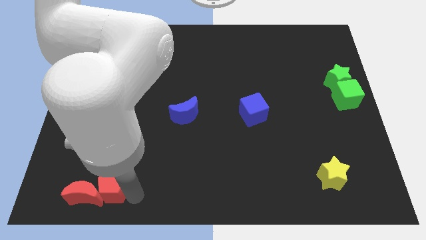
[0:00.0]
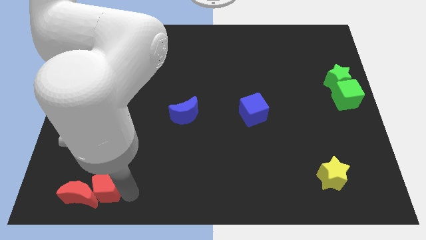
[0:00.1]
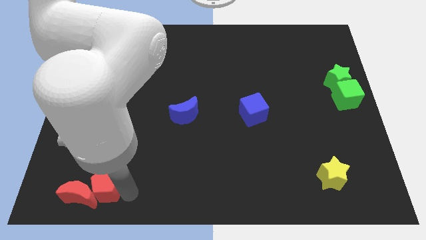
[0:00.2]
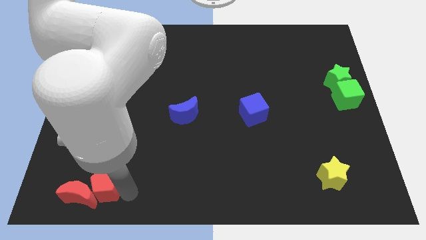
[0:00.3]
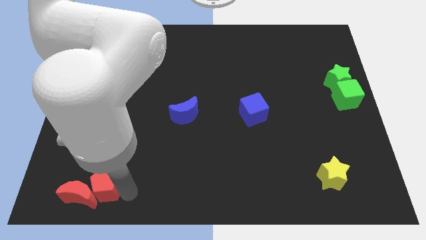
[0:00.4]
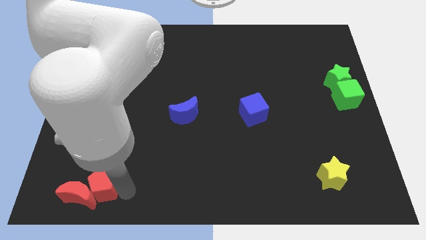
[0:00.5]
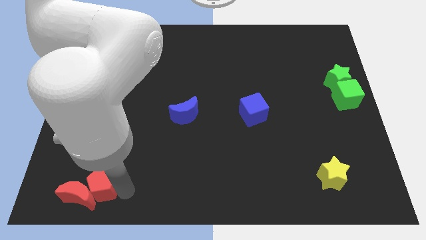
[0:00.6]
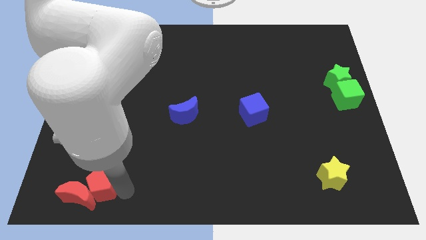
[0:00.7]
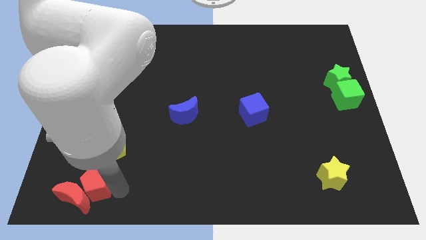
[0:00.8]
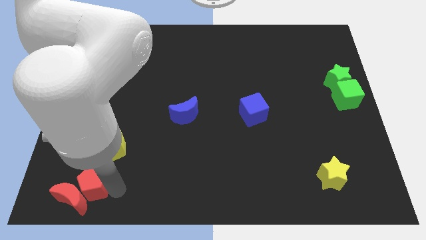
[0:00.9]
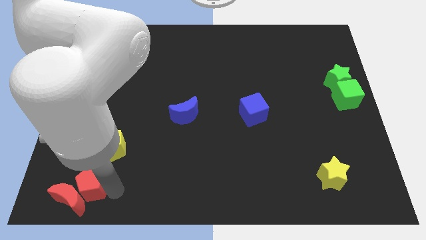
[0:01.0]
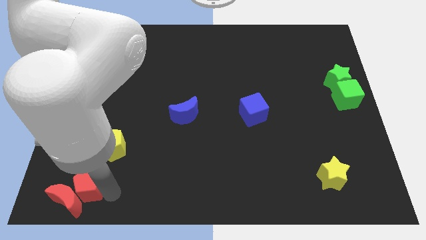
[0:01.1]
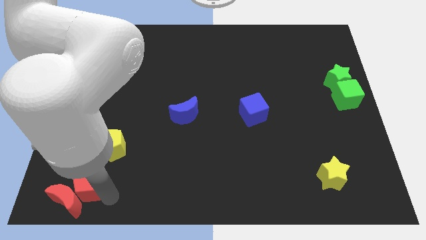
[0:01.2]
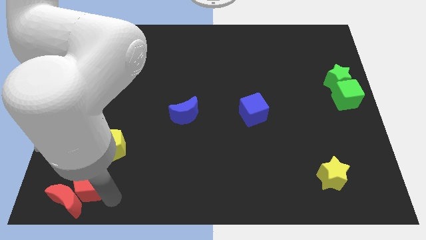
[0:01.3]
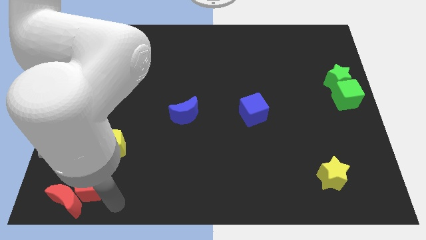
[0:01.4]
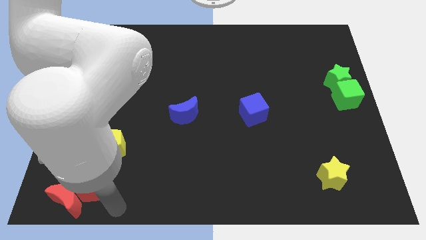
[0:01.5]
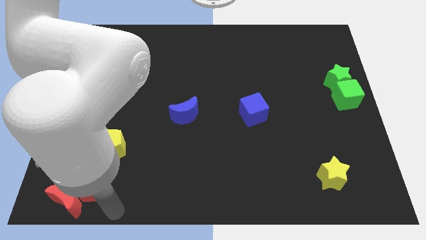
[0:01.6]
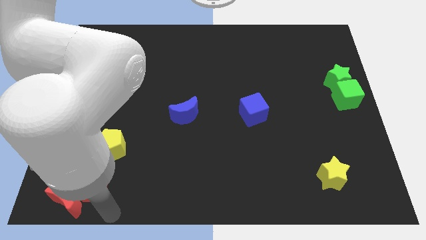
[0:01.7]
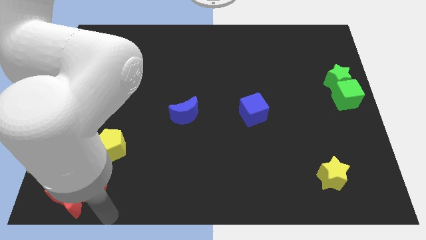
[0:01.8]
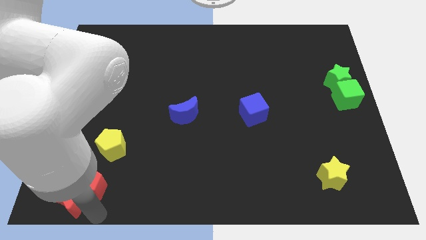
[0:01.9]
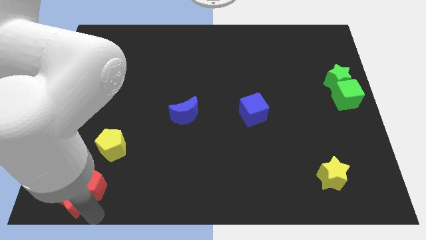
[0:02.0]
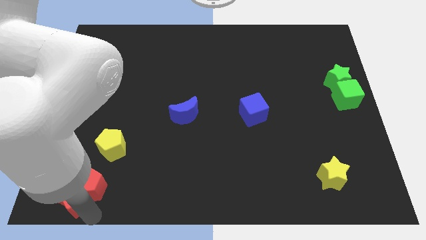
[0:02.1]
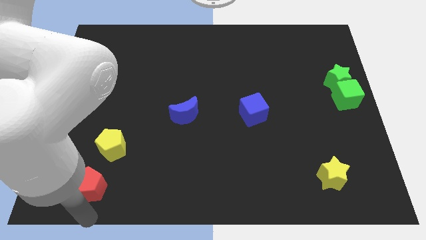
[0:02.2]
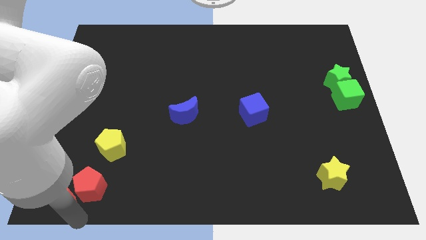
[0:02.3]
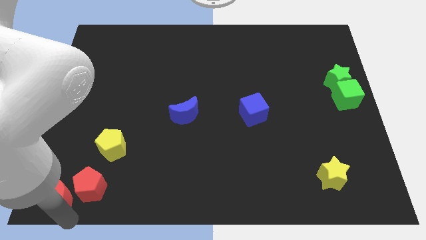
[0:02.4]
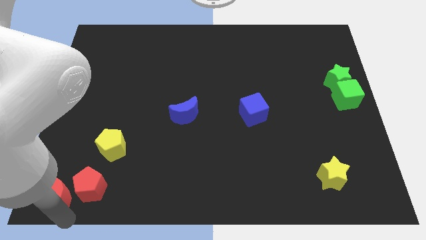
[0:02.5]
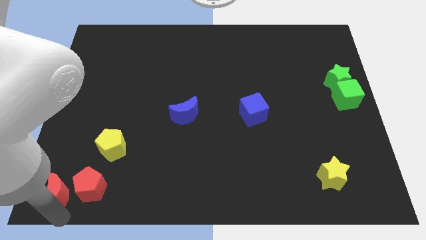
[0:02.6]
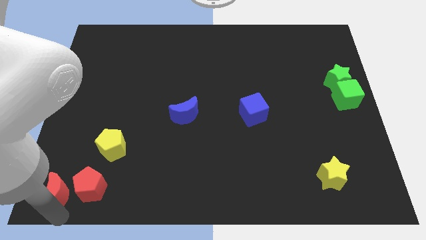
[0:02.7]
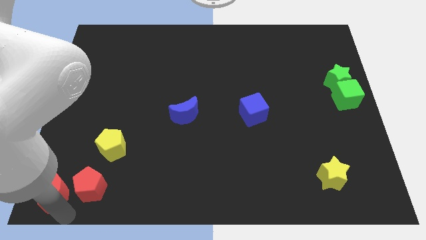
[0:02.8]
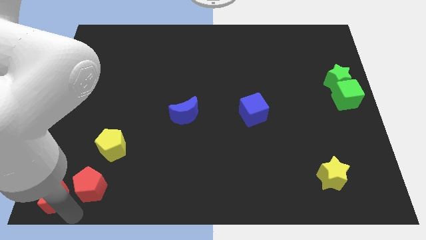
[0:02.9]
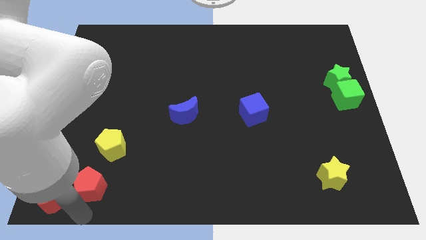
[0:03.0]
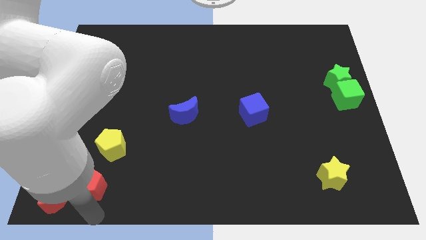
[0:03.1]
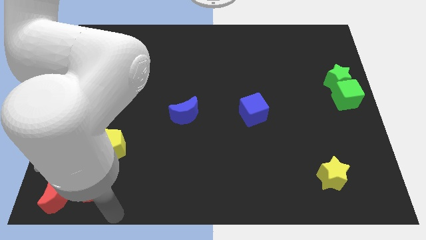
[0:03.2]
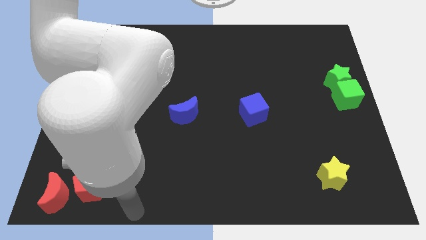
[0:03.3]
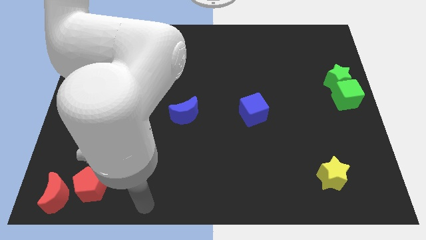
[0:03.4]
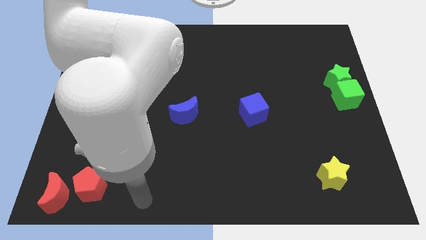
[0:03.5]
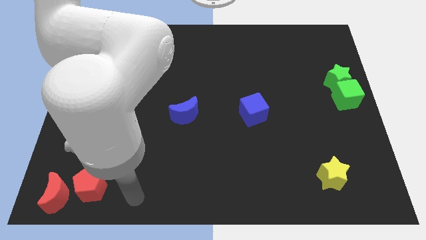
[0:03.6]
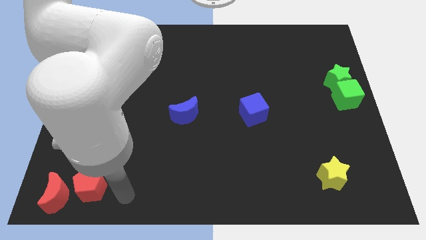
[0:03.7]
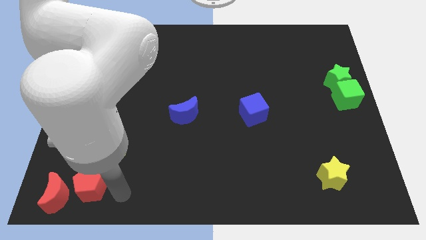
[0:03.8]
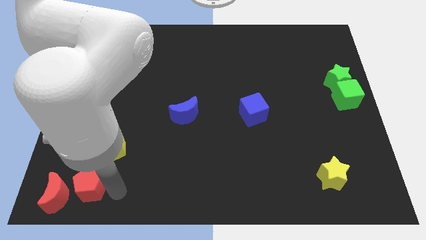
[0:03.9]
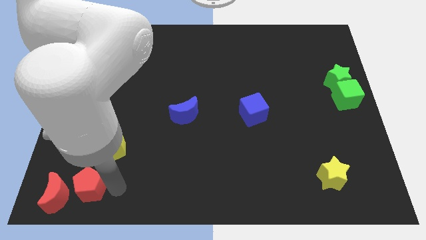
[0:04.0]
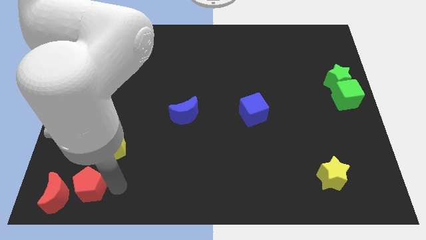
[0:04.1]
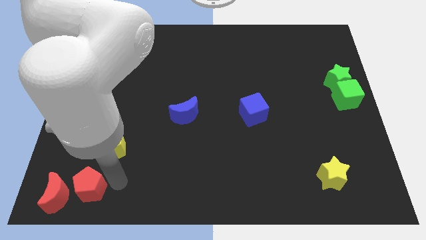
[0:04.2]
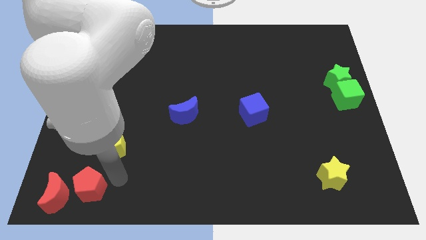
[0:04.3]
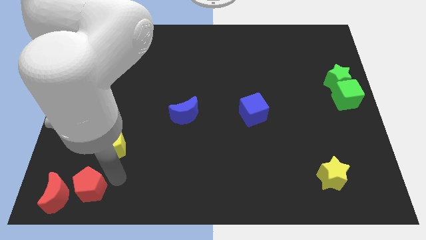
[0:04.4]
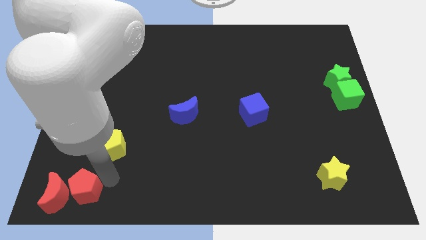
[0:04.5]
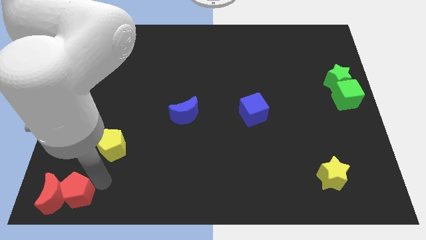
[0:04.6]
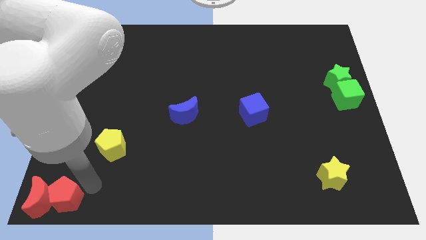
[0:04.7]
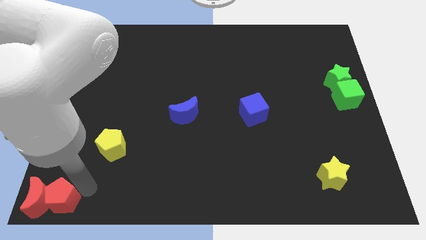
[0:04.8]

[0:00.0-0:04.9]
push the red pentagon along the red crescent to the bottom left to the board

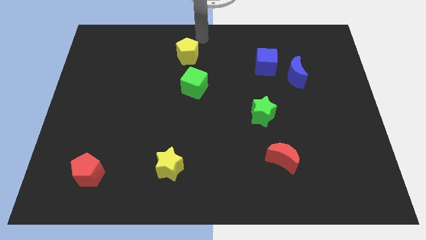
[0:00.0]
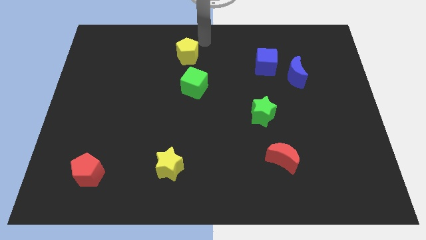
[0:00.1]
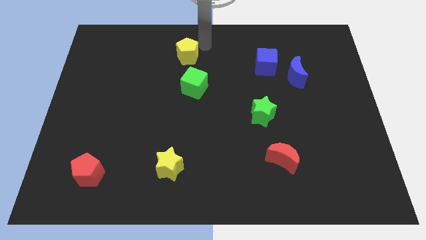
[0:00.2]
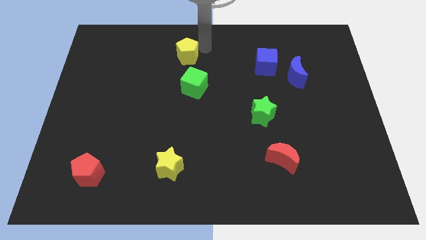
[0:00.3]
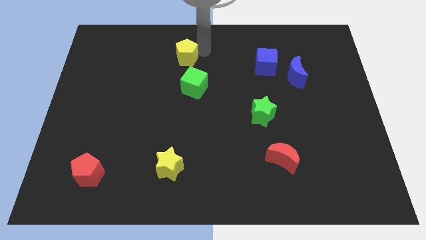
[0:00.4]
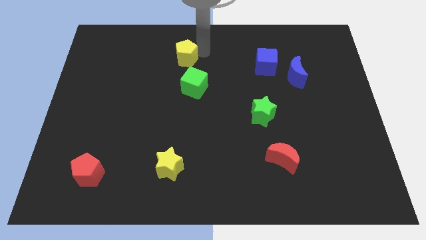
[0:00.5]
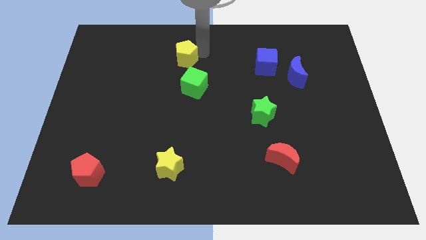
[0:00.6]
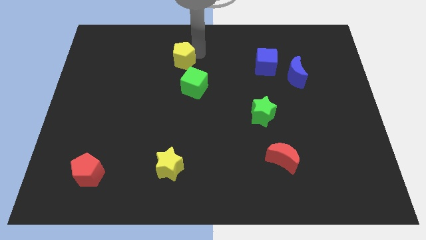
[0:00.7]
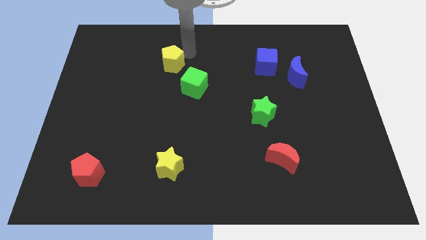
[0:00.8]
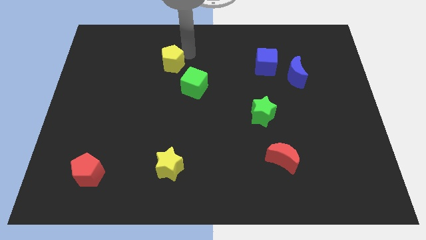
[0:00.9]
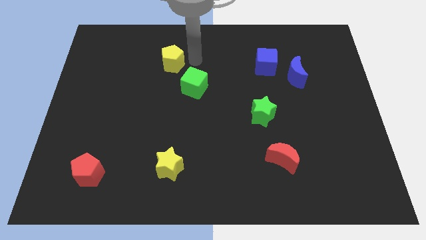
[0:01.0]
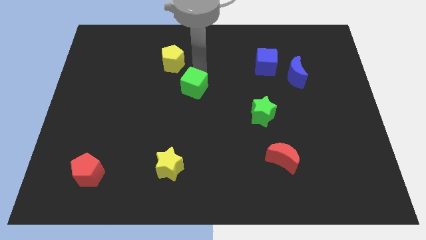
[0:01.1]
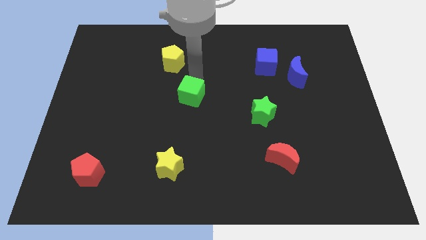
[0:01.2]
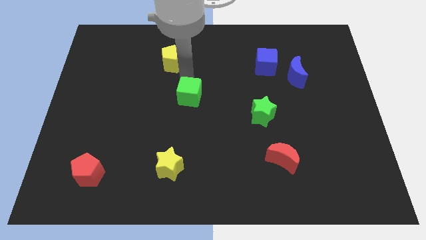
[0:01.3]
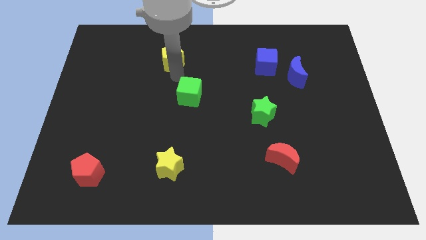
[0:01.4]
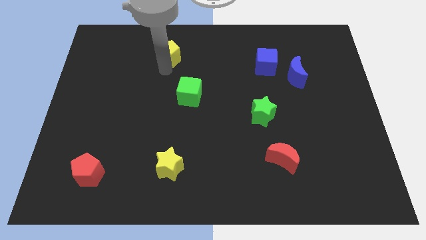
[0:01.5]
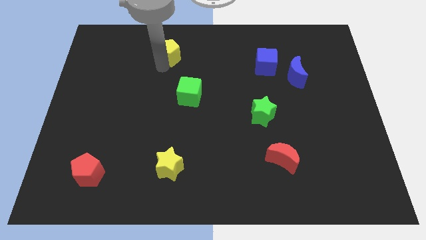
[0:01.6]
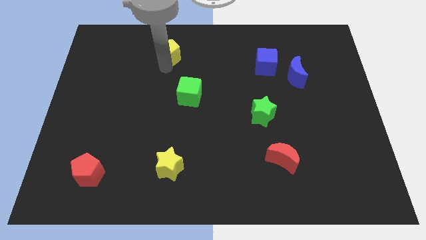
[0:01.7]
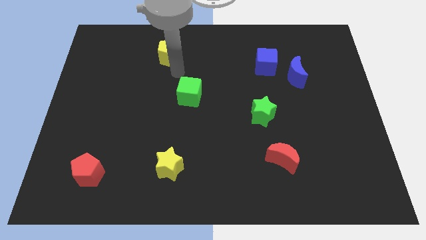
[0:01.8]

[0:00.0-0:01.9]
slide the yellow pentagon diagonally top left to the green cube

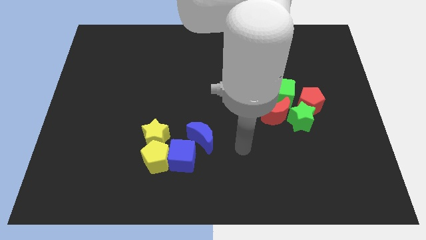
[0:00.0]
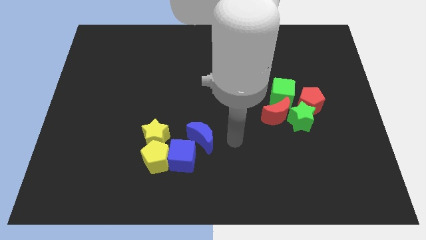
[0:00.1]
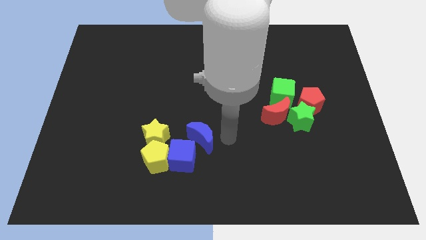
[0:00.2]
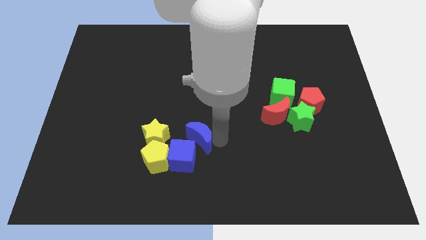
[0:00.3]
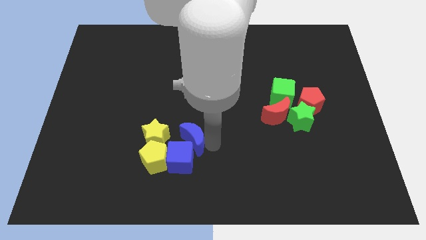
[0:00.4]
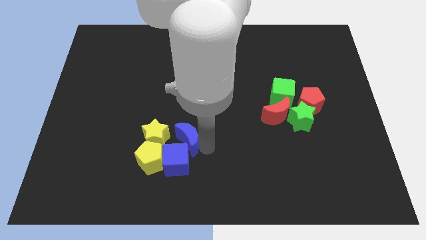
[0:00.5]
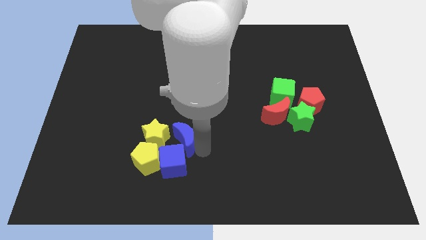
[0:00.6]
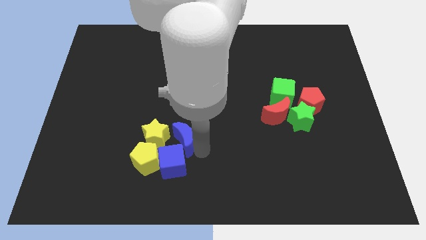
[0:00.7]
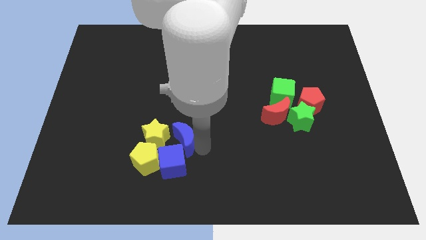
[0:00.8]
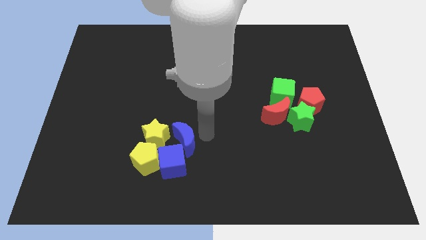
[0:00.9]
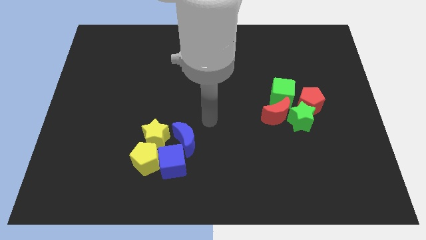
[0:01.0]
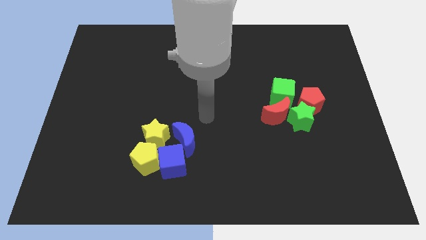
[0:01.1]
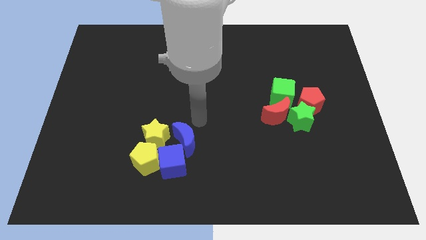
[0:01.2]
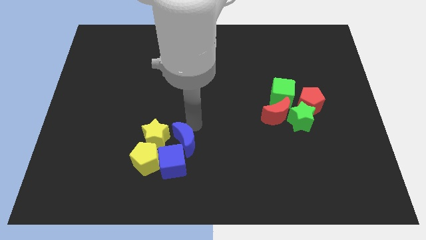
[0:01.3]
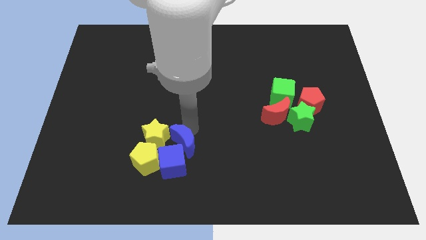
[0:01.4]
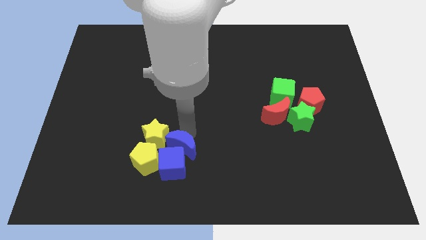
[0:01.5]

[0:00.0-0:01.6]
slide the blue crescent and blue cube into the yellow pentagon and yellow star

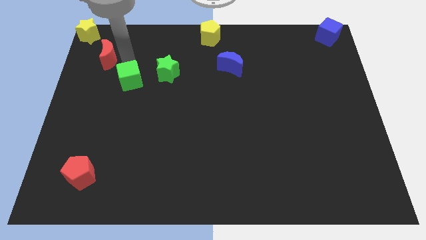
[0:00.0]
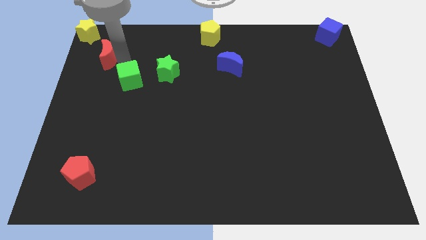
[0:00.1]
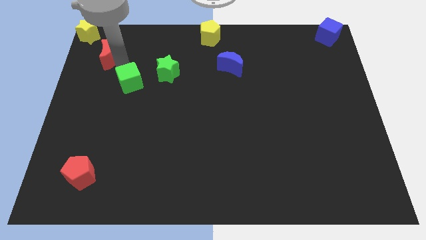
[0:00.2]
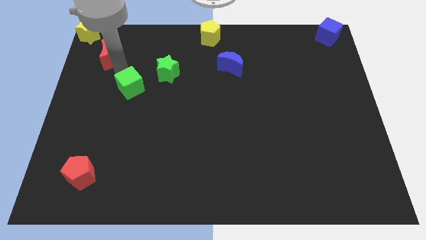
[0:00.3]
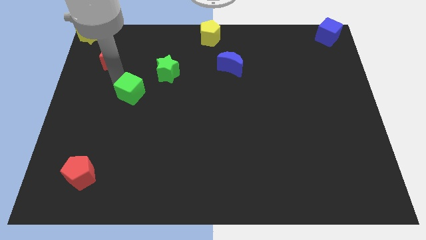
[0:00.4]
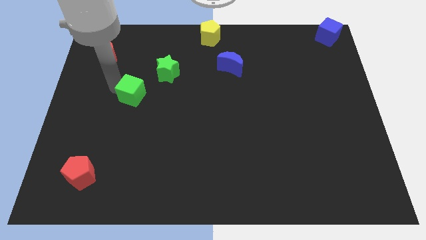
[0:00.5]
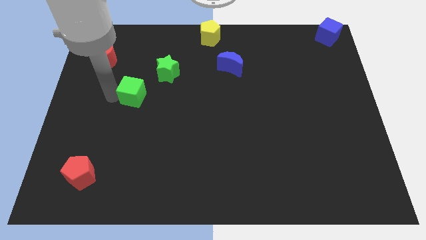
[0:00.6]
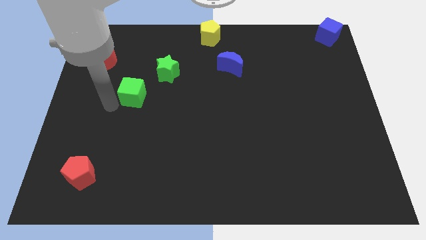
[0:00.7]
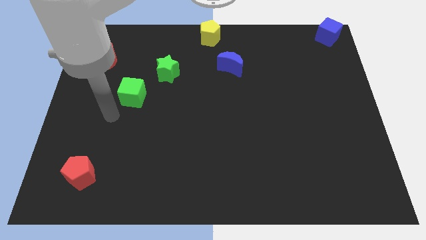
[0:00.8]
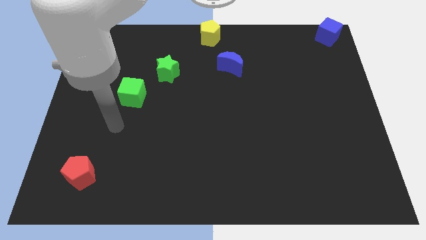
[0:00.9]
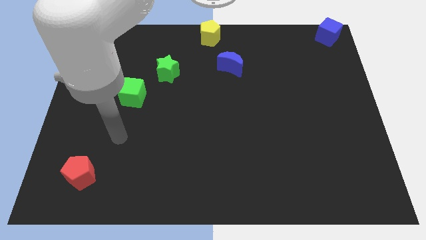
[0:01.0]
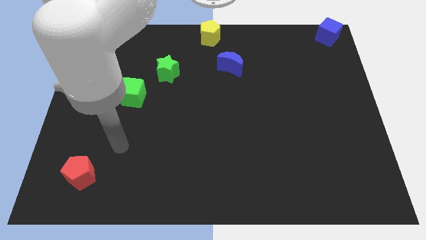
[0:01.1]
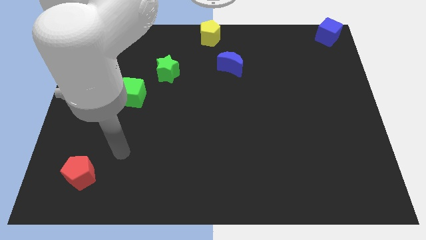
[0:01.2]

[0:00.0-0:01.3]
move the green cube slightly to the bottom left side of the green star
